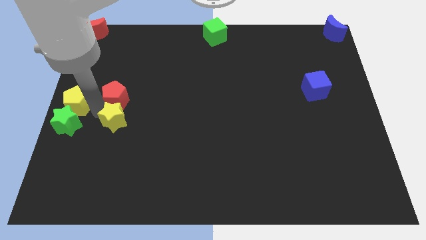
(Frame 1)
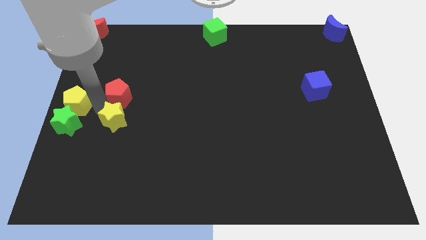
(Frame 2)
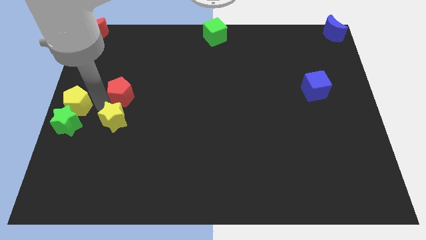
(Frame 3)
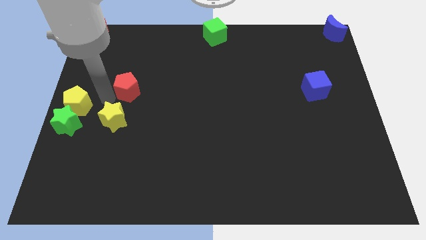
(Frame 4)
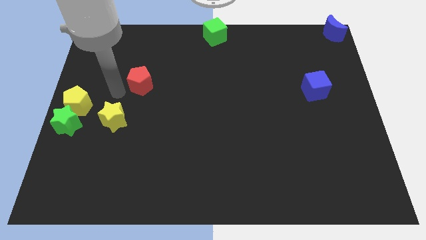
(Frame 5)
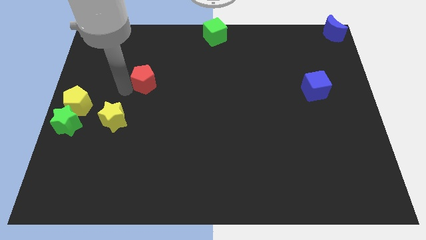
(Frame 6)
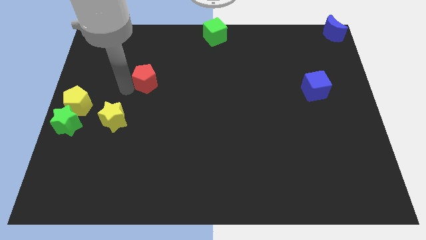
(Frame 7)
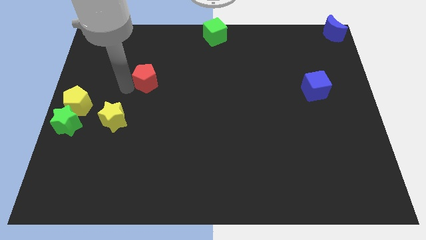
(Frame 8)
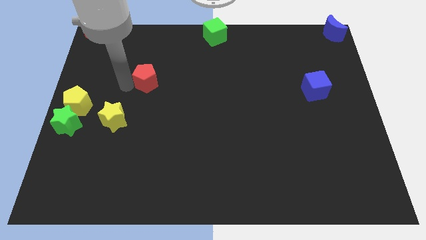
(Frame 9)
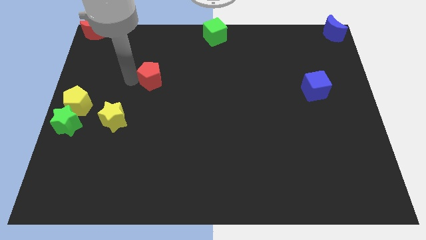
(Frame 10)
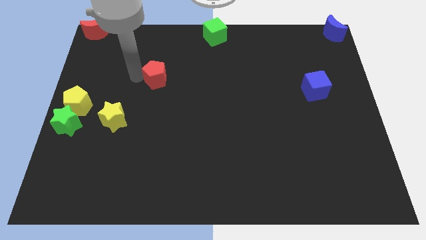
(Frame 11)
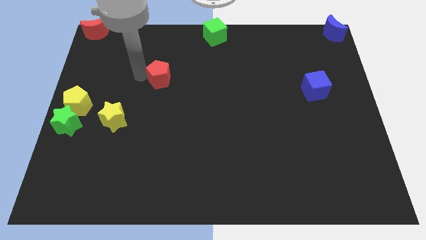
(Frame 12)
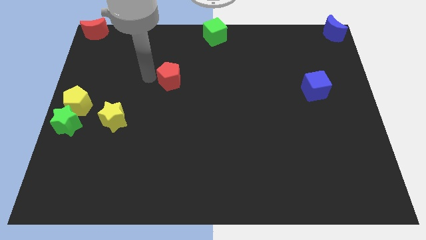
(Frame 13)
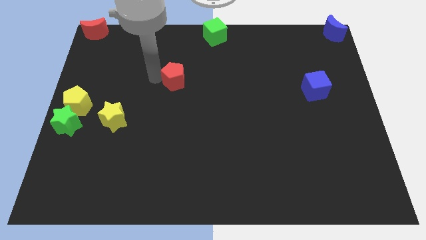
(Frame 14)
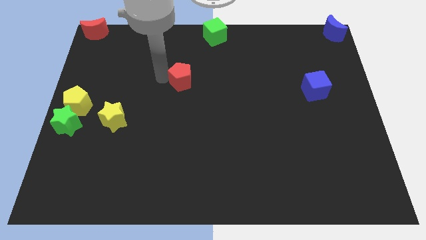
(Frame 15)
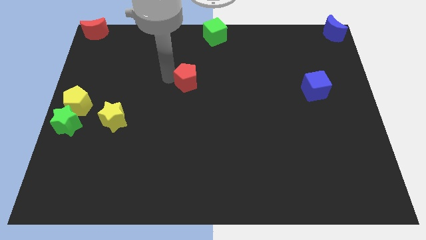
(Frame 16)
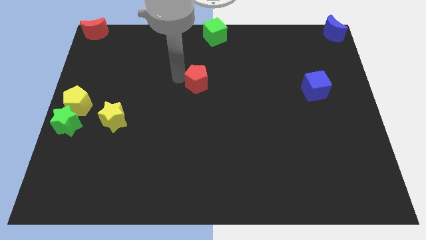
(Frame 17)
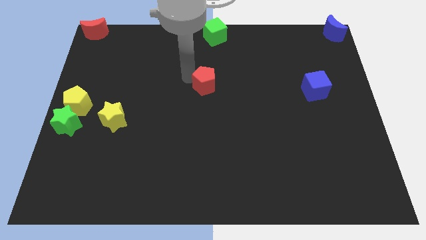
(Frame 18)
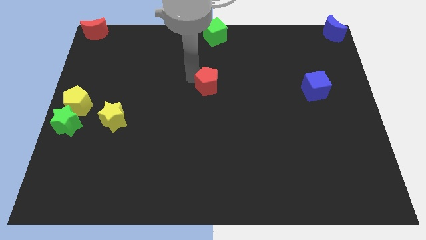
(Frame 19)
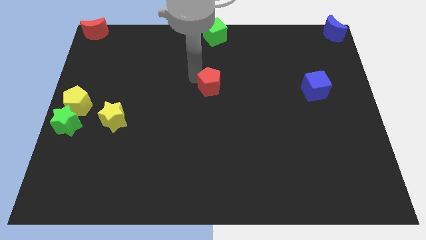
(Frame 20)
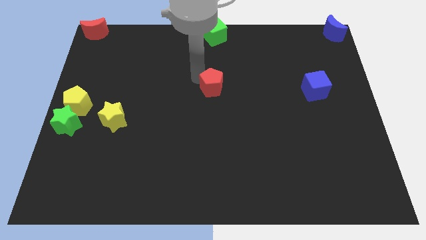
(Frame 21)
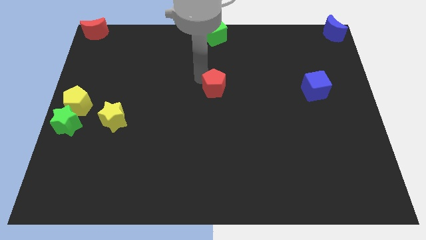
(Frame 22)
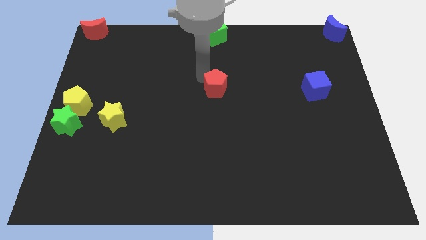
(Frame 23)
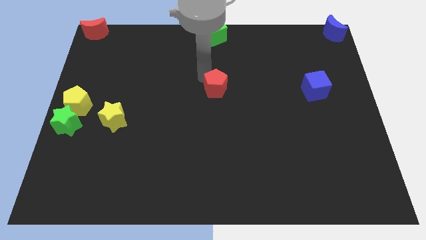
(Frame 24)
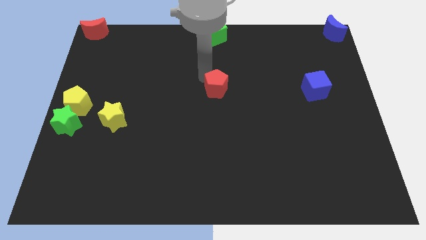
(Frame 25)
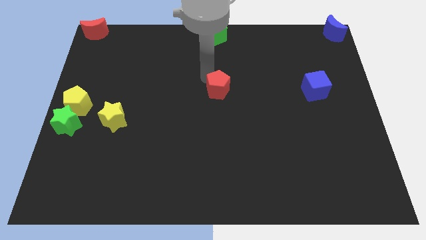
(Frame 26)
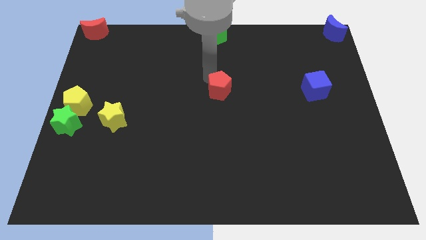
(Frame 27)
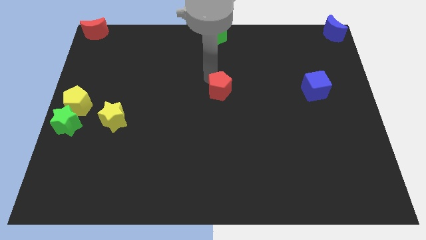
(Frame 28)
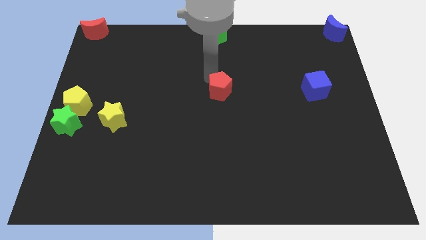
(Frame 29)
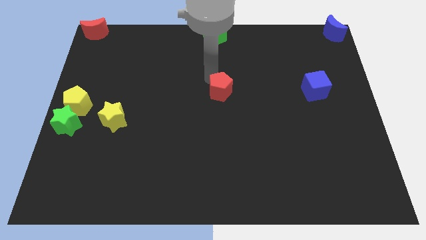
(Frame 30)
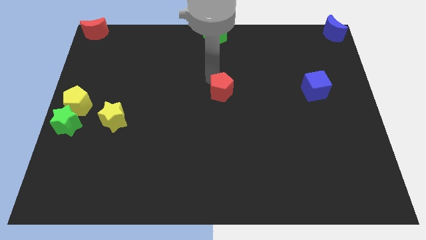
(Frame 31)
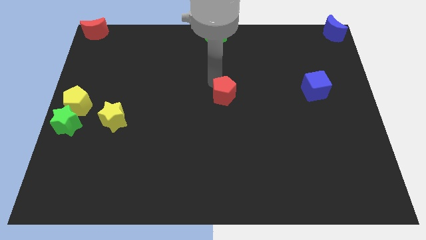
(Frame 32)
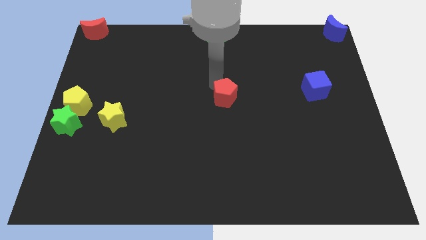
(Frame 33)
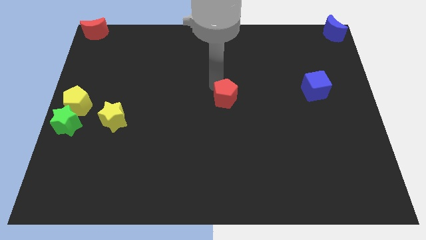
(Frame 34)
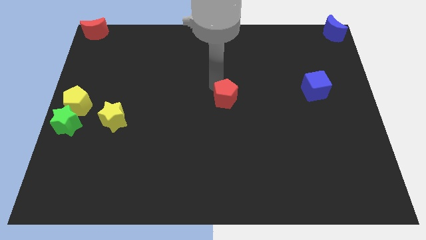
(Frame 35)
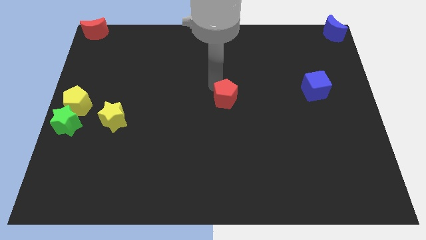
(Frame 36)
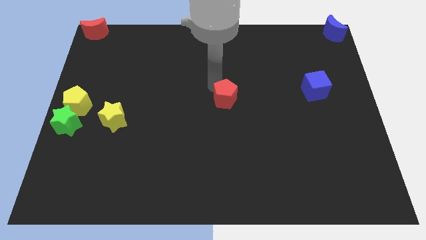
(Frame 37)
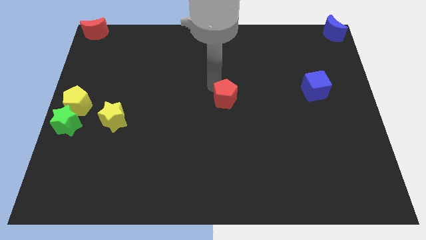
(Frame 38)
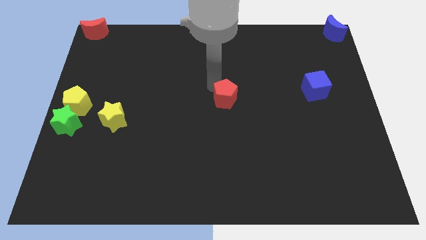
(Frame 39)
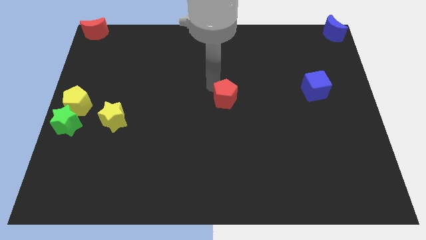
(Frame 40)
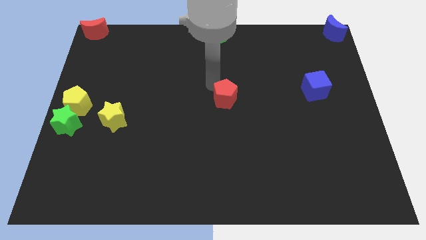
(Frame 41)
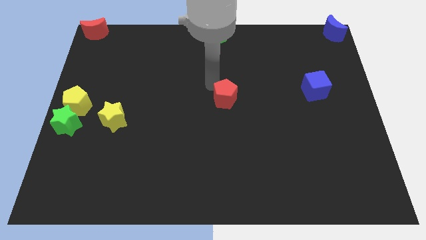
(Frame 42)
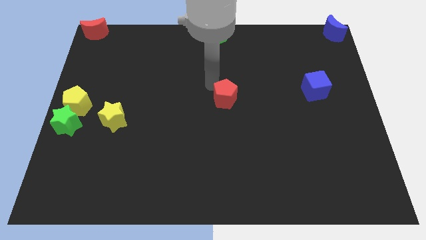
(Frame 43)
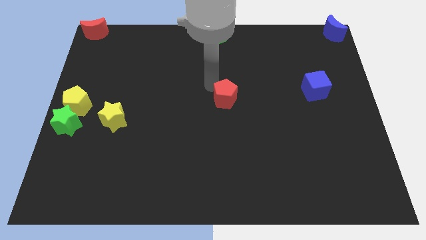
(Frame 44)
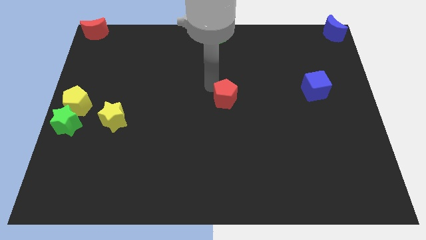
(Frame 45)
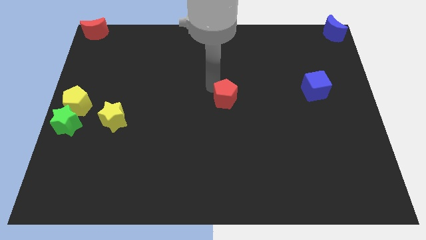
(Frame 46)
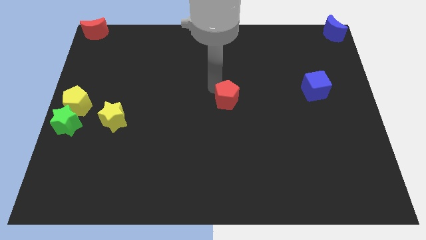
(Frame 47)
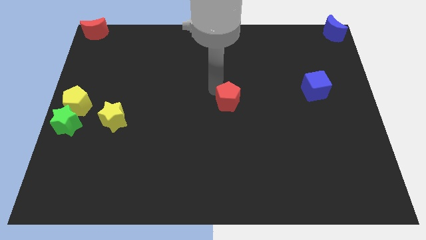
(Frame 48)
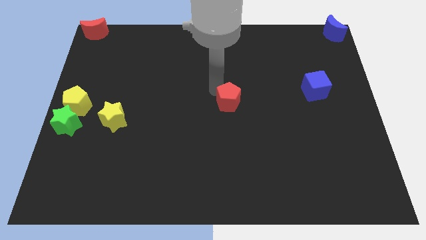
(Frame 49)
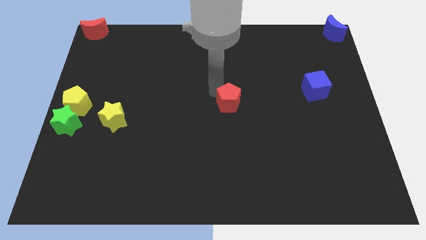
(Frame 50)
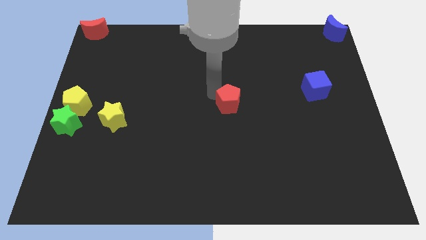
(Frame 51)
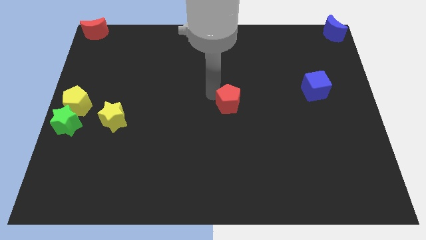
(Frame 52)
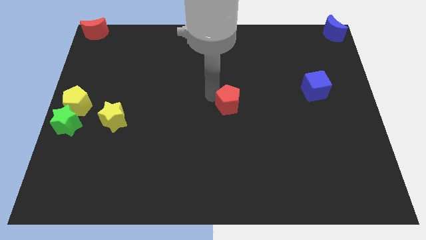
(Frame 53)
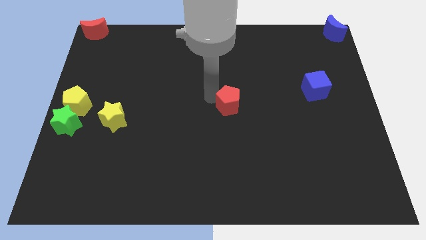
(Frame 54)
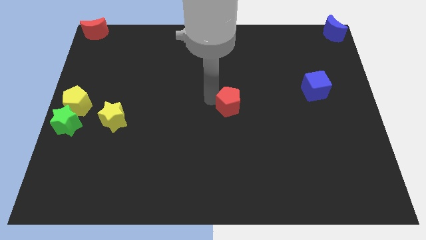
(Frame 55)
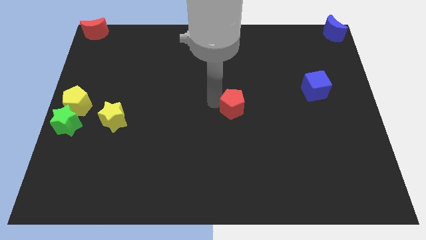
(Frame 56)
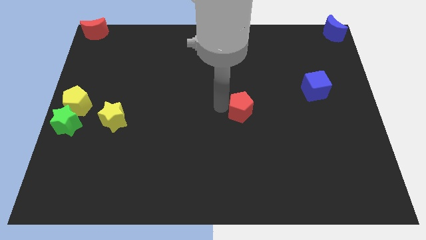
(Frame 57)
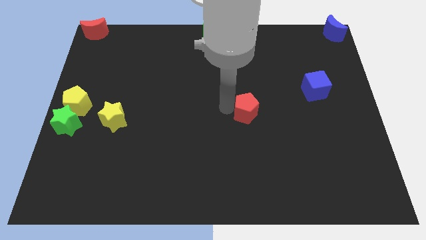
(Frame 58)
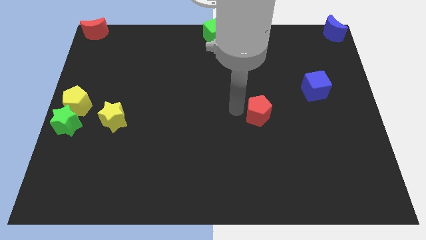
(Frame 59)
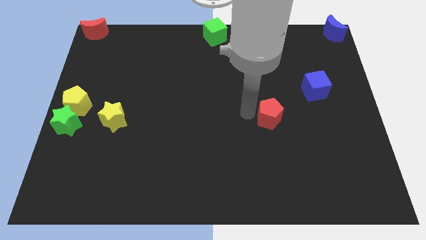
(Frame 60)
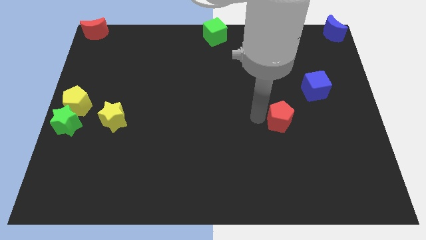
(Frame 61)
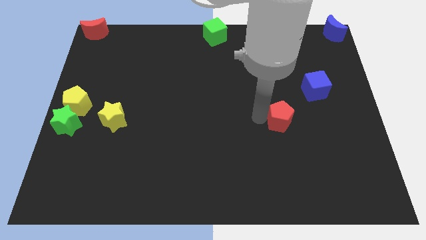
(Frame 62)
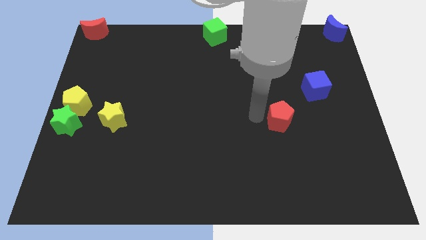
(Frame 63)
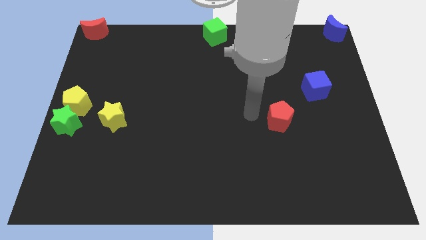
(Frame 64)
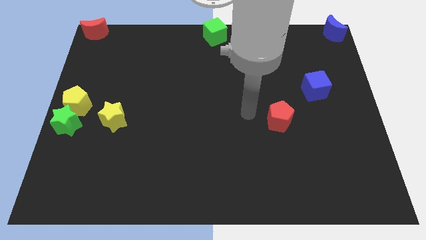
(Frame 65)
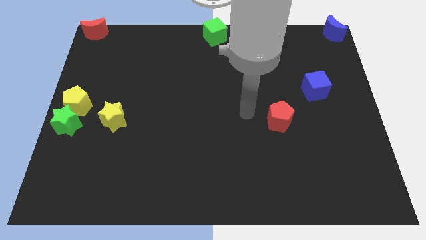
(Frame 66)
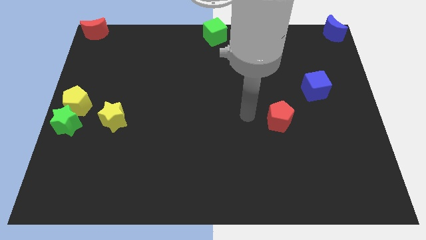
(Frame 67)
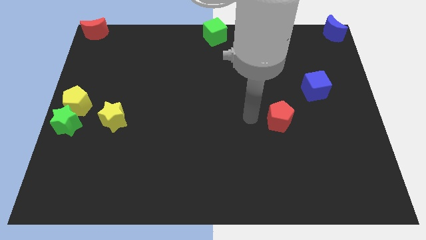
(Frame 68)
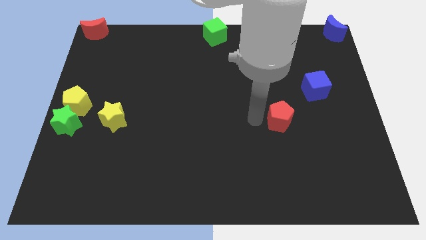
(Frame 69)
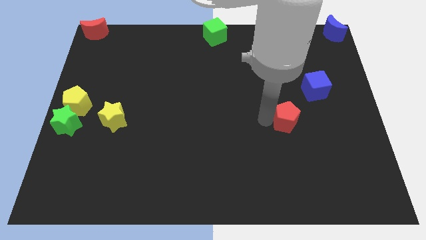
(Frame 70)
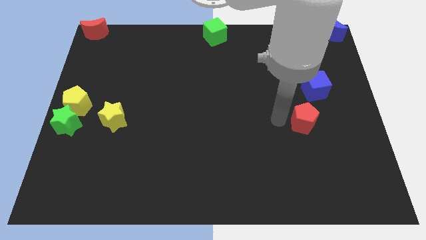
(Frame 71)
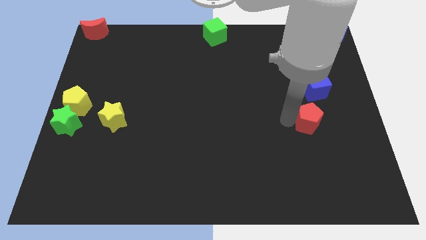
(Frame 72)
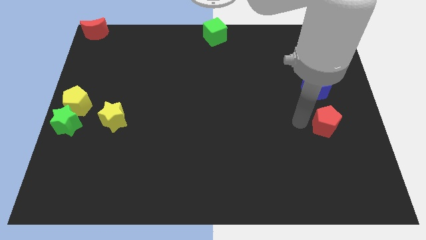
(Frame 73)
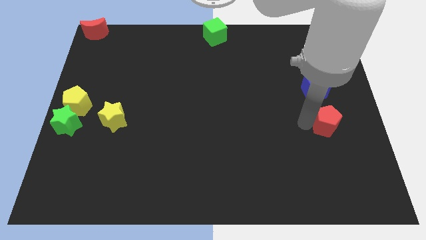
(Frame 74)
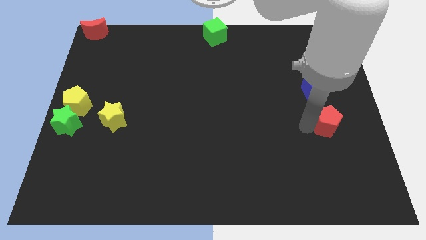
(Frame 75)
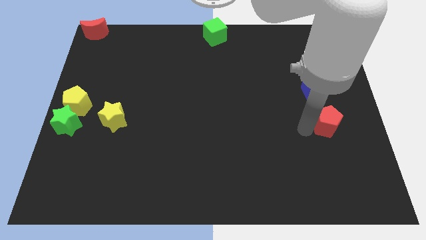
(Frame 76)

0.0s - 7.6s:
push the red pentagon down to the blue cube

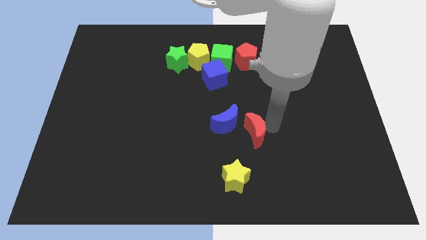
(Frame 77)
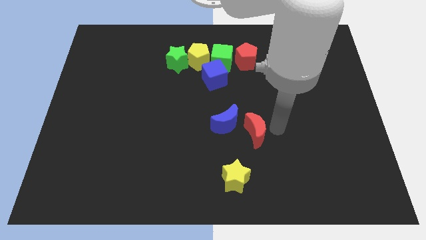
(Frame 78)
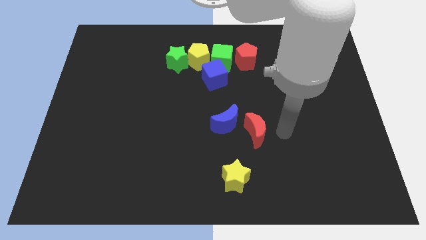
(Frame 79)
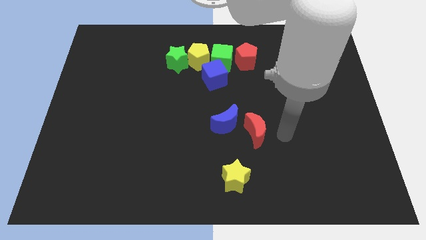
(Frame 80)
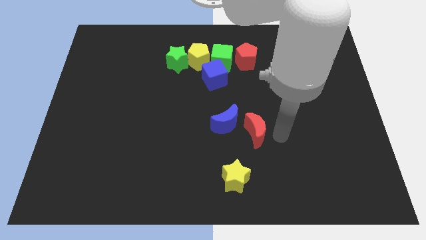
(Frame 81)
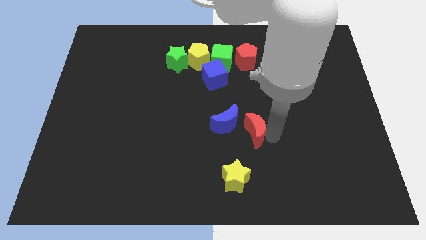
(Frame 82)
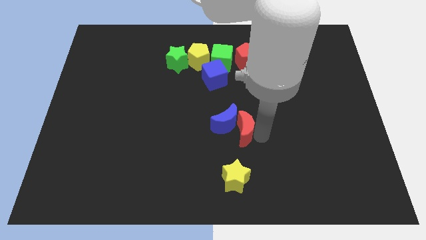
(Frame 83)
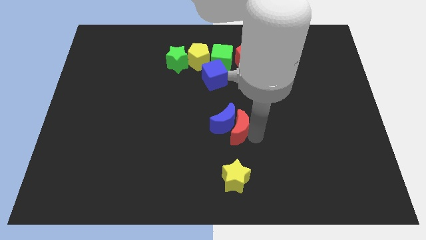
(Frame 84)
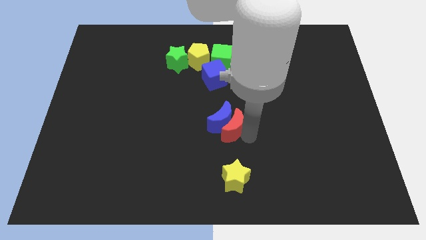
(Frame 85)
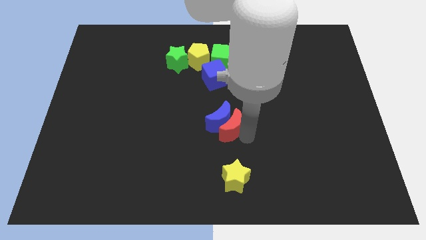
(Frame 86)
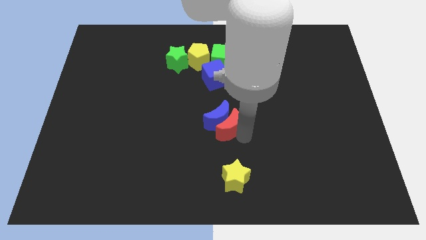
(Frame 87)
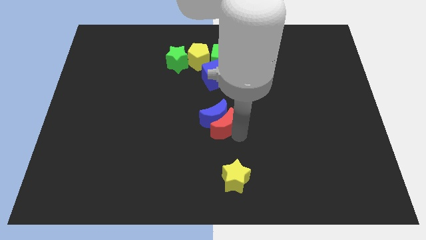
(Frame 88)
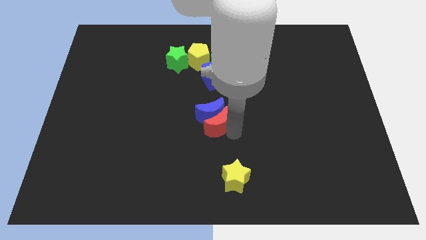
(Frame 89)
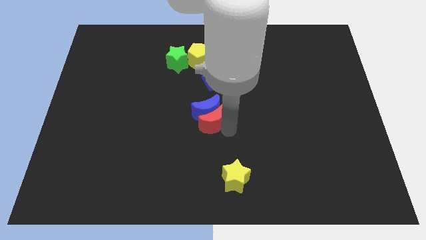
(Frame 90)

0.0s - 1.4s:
place red moon to the center of the board

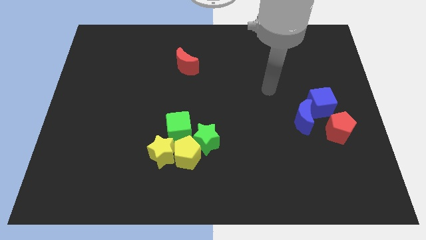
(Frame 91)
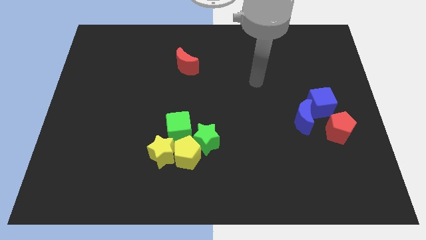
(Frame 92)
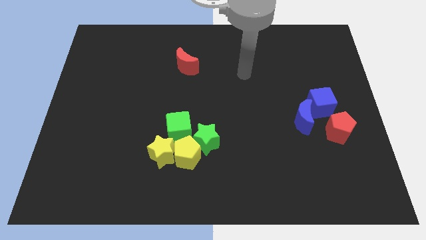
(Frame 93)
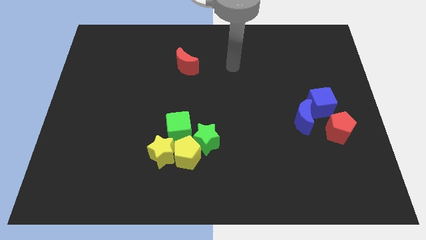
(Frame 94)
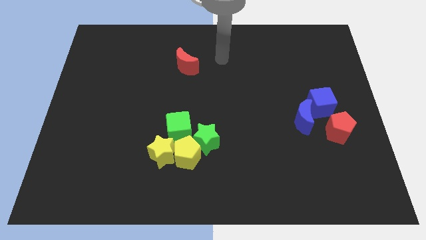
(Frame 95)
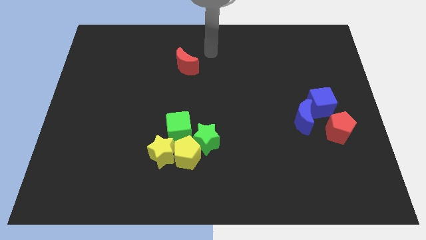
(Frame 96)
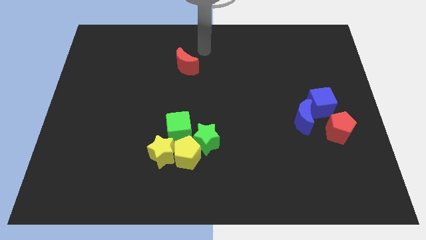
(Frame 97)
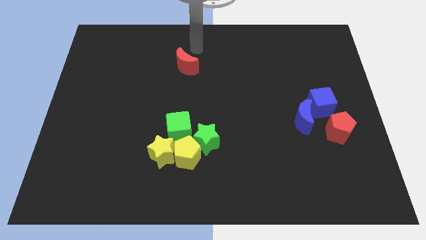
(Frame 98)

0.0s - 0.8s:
go and place your hand above the red crescent
